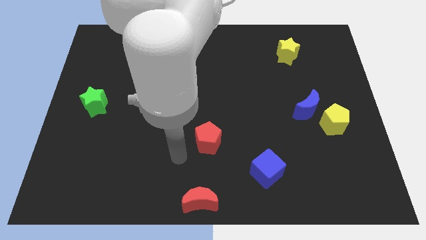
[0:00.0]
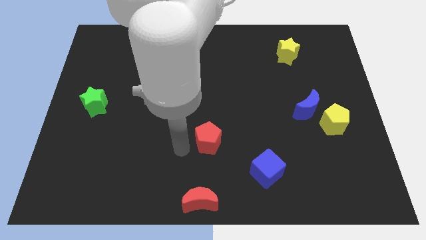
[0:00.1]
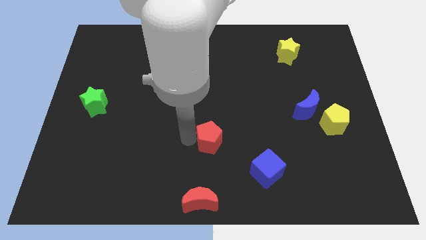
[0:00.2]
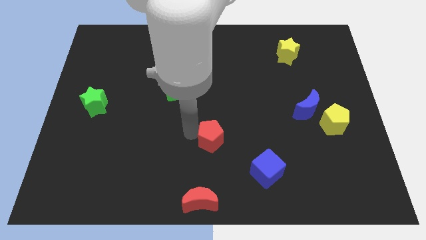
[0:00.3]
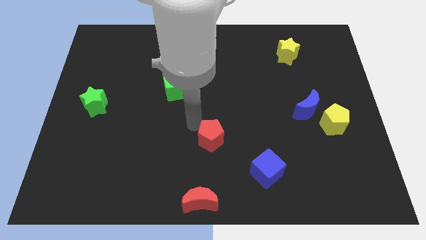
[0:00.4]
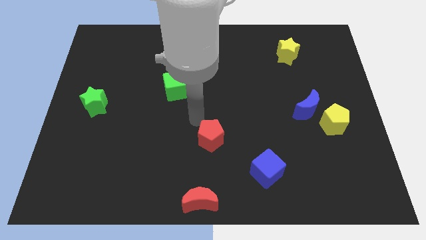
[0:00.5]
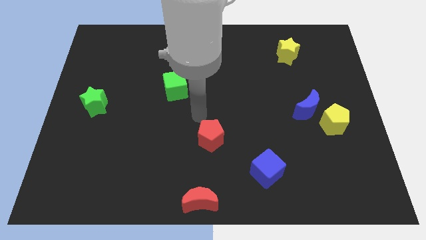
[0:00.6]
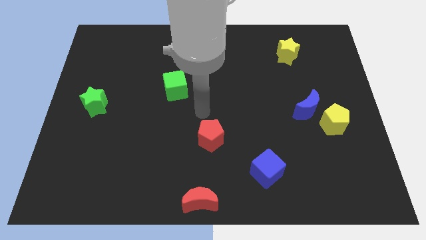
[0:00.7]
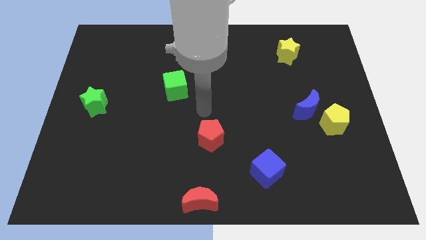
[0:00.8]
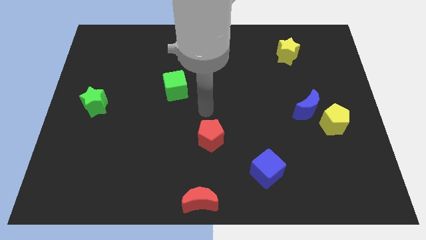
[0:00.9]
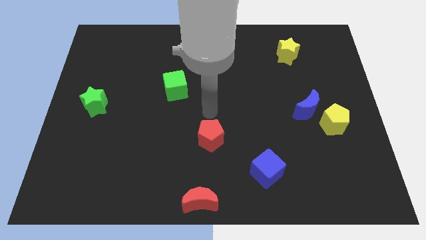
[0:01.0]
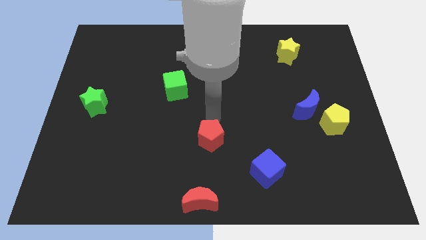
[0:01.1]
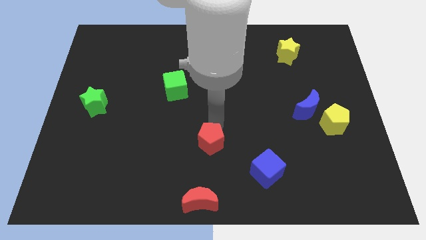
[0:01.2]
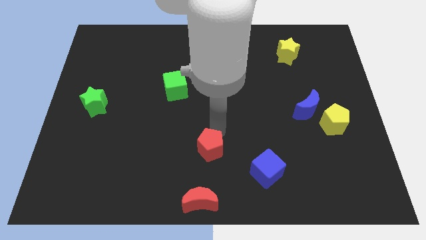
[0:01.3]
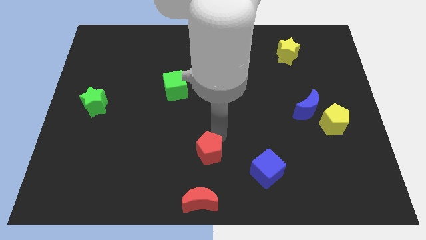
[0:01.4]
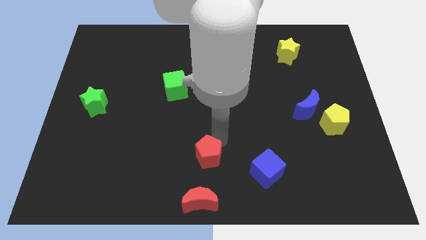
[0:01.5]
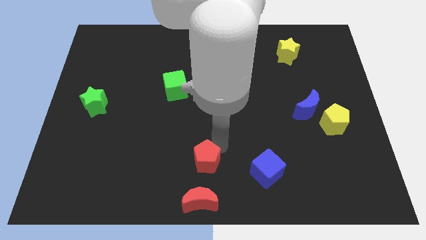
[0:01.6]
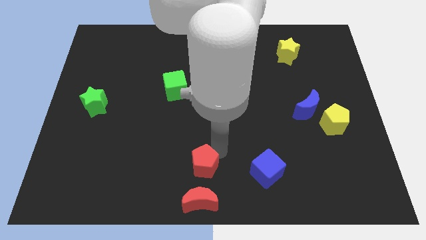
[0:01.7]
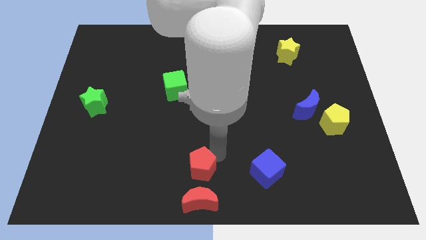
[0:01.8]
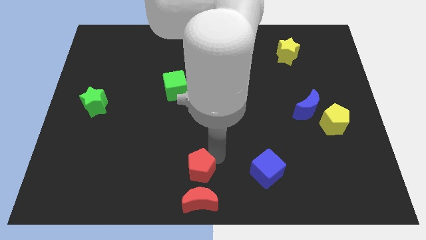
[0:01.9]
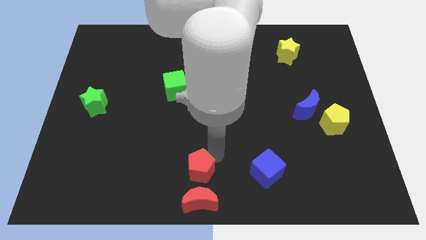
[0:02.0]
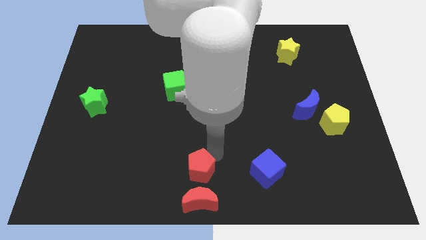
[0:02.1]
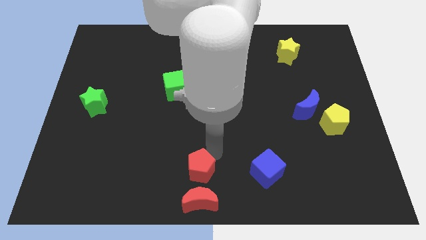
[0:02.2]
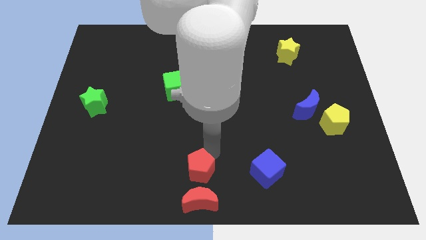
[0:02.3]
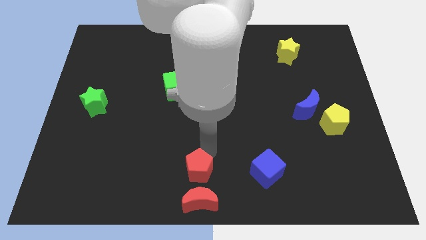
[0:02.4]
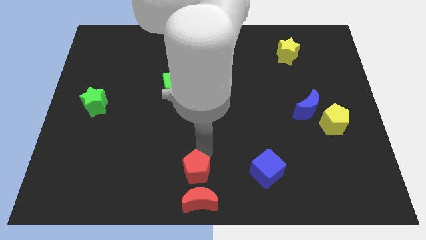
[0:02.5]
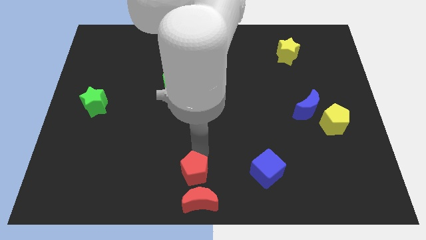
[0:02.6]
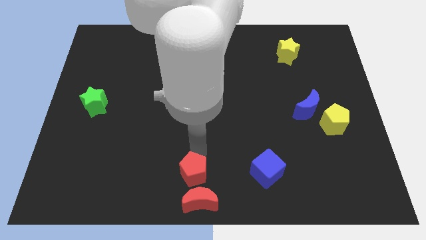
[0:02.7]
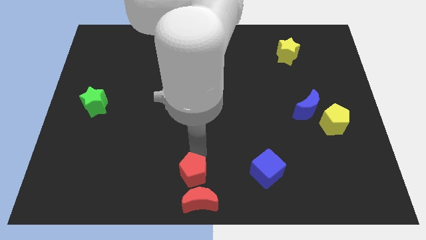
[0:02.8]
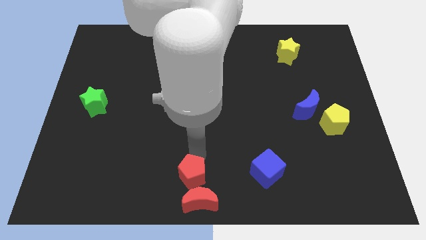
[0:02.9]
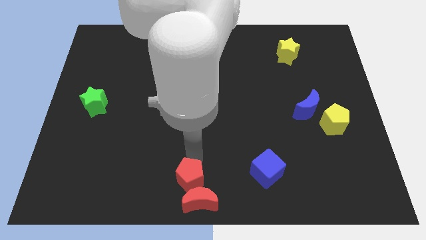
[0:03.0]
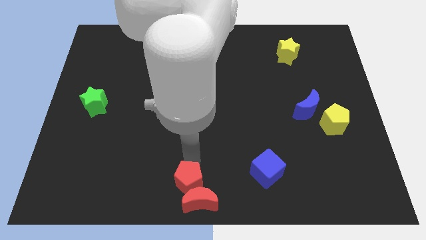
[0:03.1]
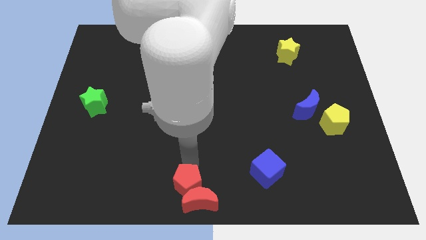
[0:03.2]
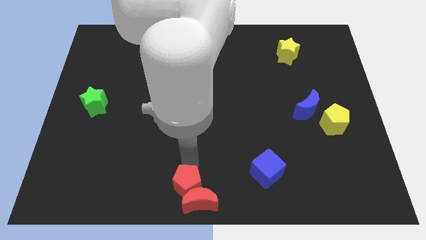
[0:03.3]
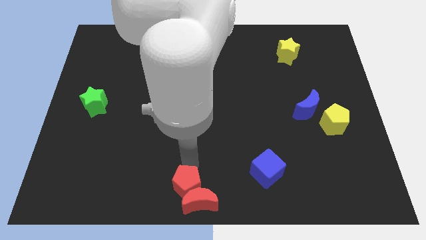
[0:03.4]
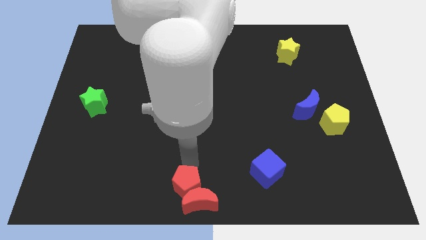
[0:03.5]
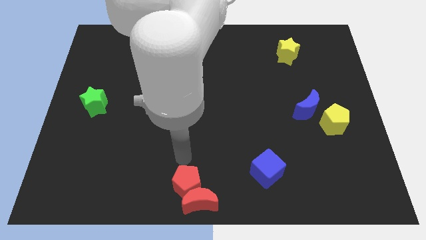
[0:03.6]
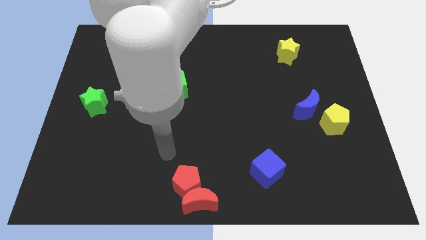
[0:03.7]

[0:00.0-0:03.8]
push the red pentagon into the red moon

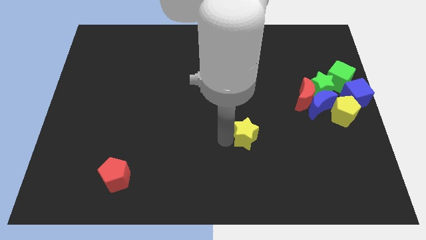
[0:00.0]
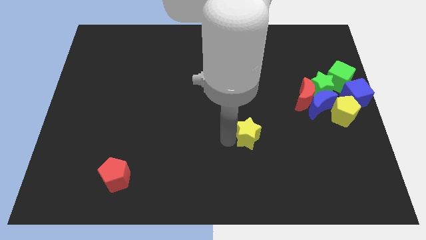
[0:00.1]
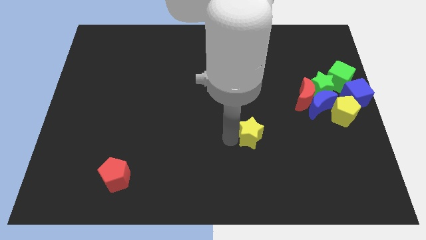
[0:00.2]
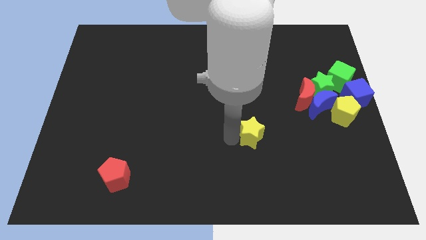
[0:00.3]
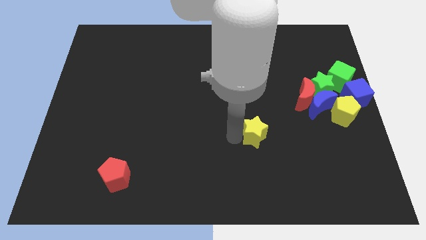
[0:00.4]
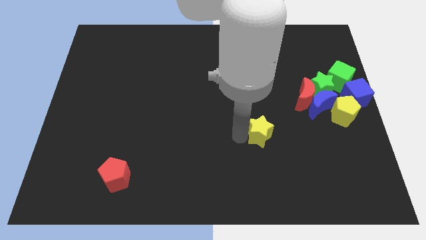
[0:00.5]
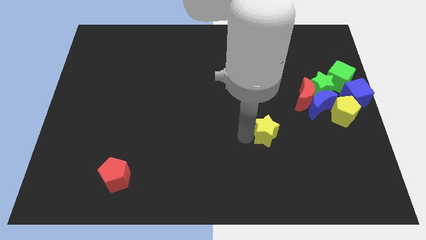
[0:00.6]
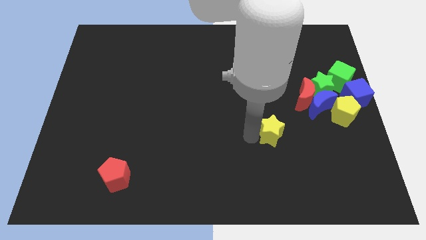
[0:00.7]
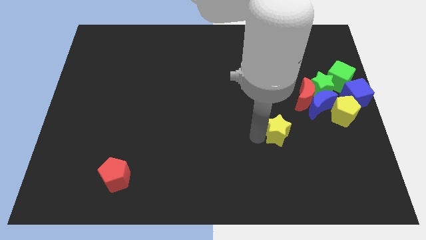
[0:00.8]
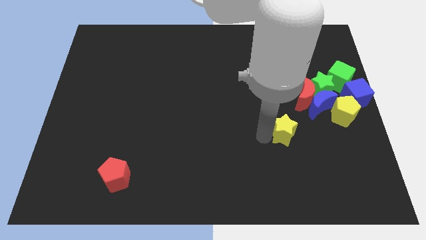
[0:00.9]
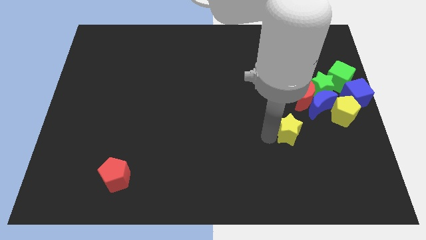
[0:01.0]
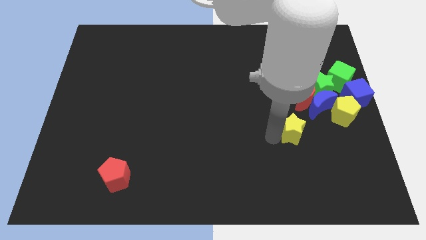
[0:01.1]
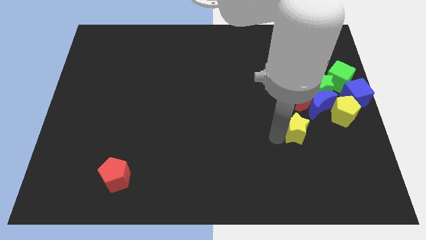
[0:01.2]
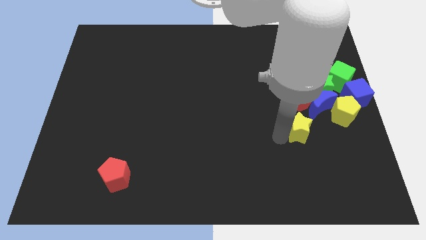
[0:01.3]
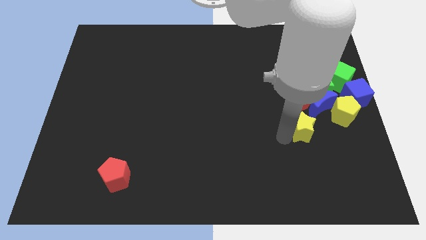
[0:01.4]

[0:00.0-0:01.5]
push the yellow star to the bottom of the red crescent

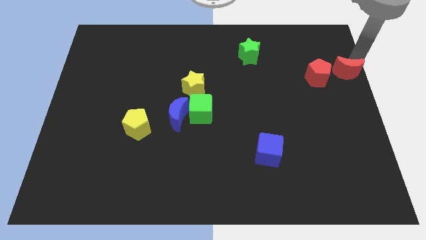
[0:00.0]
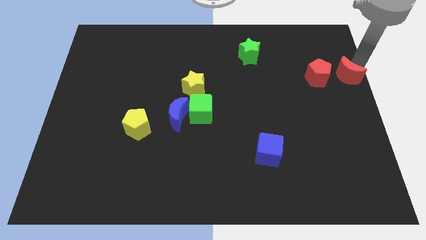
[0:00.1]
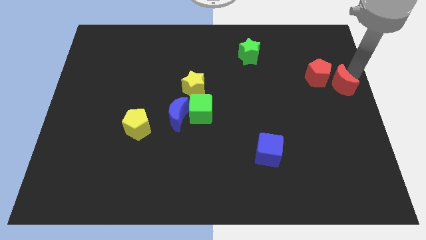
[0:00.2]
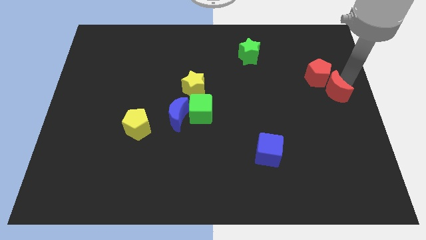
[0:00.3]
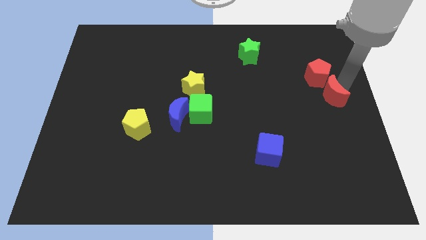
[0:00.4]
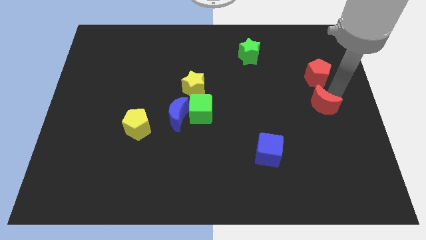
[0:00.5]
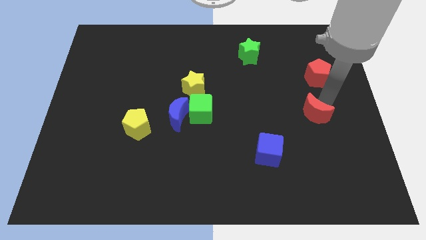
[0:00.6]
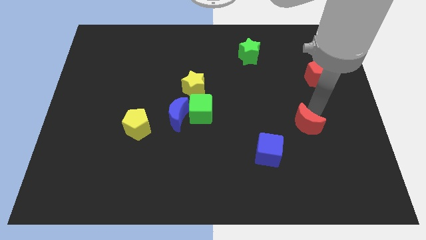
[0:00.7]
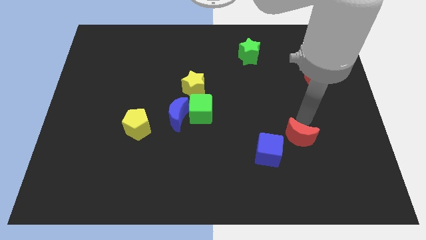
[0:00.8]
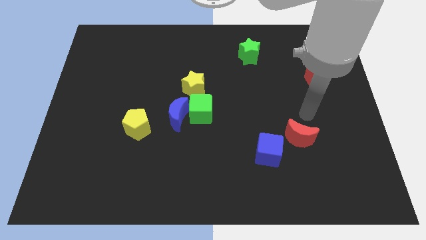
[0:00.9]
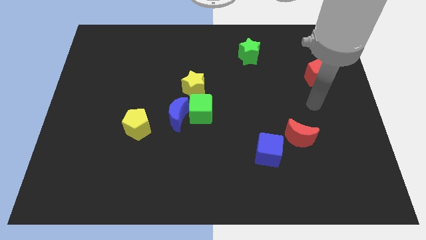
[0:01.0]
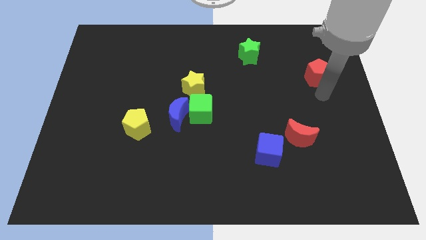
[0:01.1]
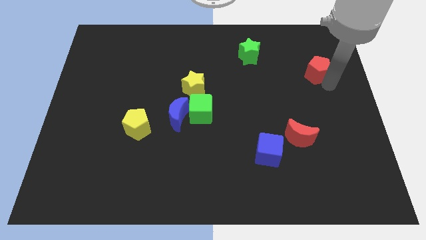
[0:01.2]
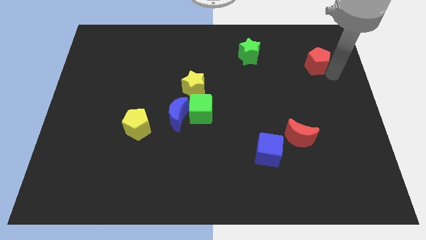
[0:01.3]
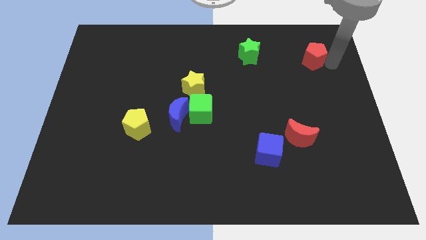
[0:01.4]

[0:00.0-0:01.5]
separate the red moon from the red pentagon

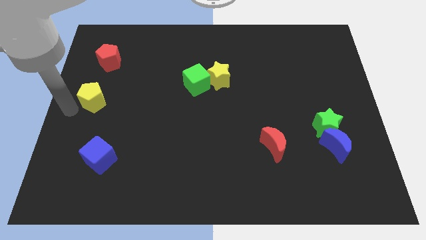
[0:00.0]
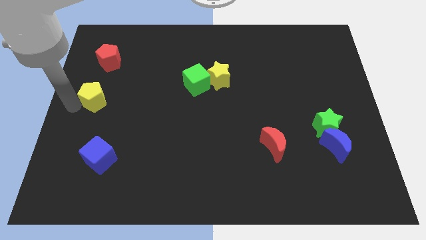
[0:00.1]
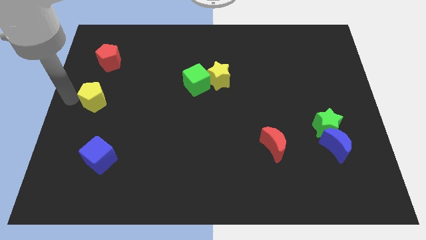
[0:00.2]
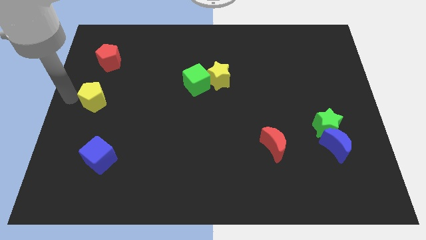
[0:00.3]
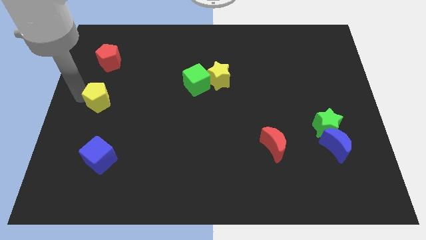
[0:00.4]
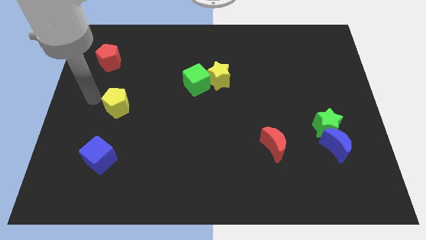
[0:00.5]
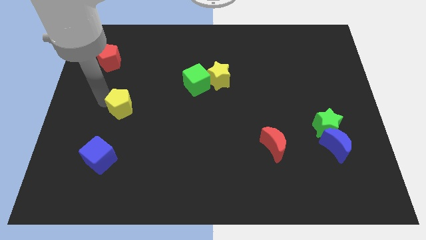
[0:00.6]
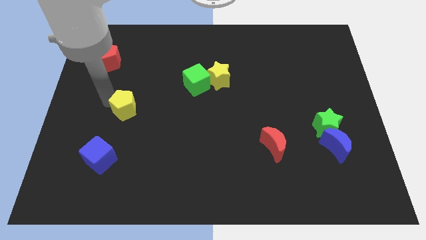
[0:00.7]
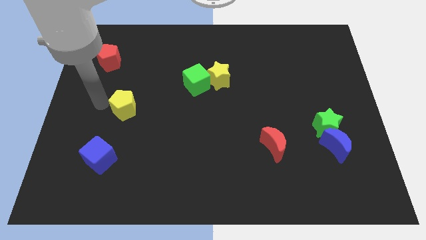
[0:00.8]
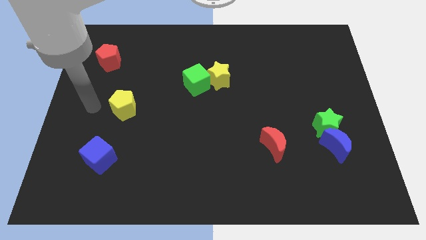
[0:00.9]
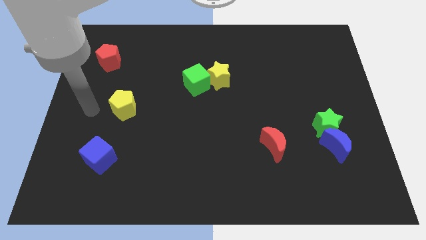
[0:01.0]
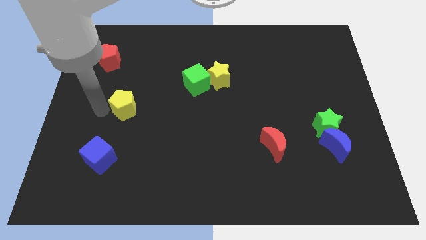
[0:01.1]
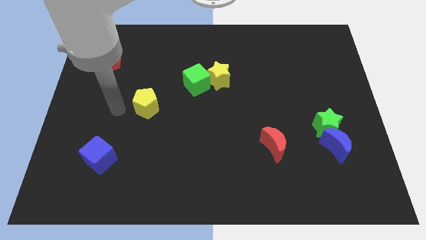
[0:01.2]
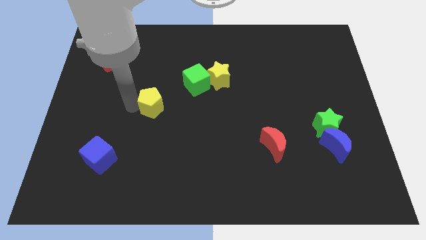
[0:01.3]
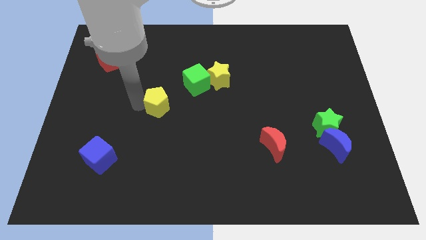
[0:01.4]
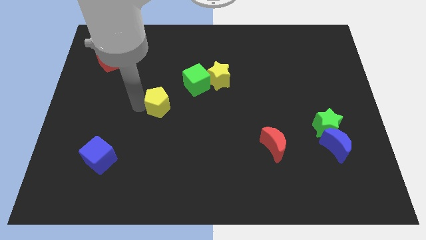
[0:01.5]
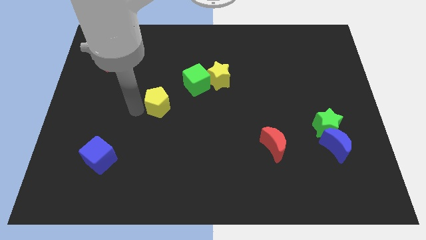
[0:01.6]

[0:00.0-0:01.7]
move the yellow pentagon towards the green cube

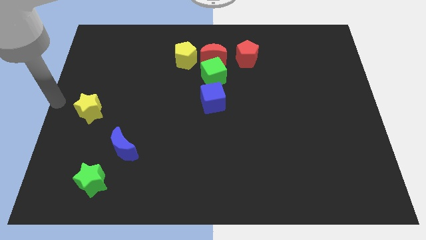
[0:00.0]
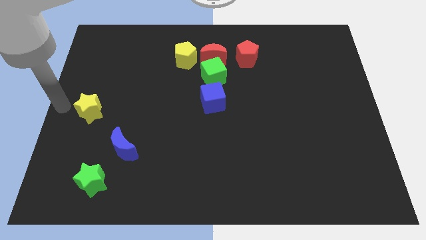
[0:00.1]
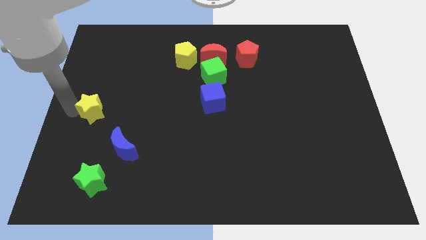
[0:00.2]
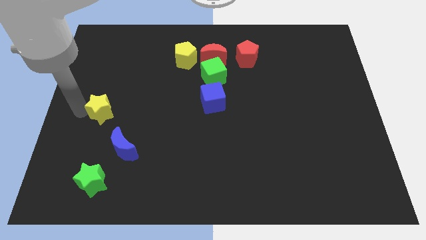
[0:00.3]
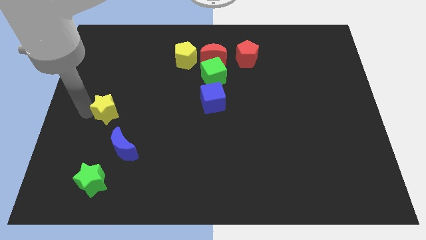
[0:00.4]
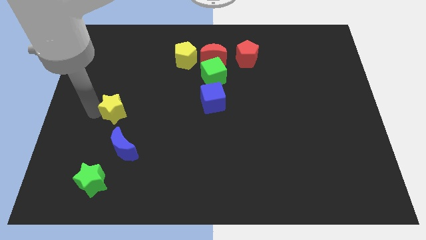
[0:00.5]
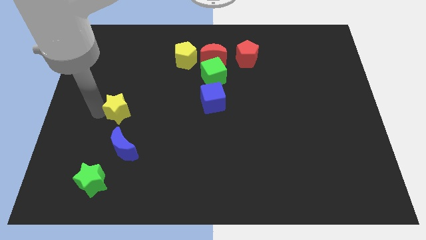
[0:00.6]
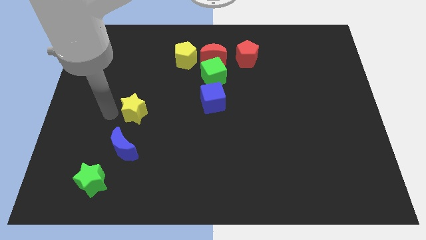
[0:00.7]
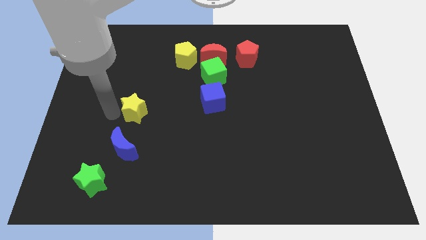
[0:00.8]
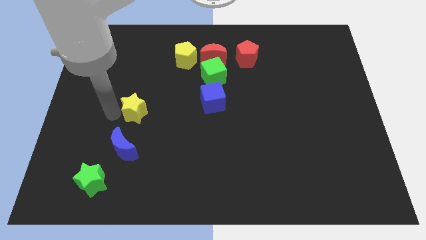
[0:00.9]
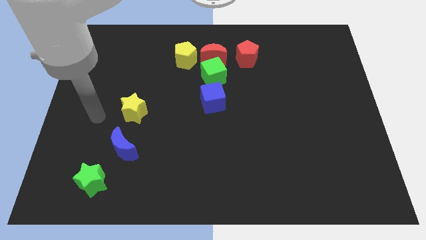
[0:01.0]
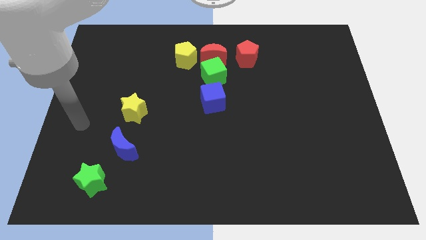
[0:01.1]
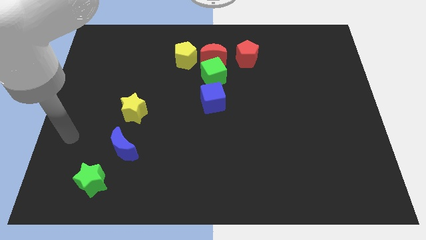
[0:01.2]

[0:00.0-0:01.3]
push the yellow star towards the center of the board
